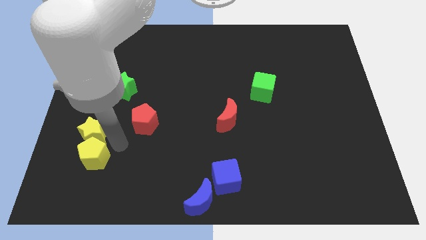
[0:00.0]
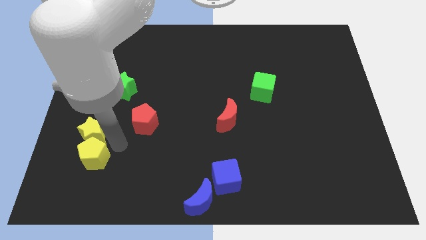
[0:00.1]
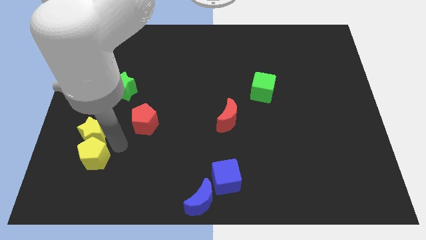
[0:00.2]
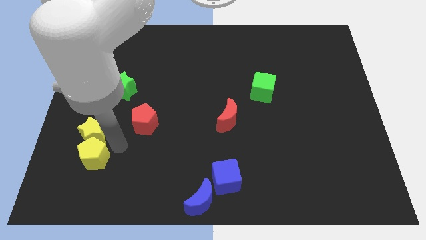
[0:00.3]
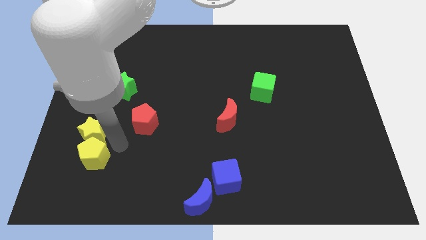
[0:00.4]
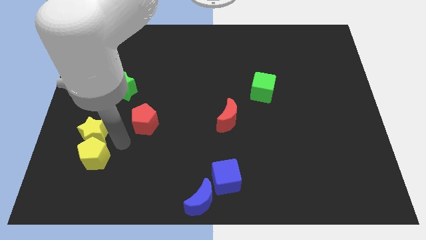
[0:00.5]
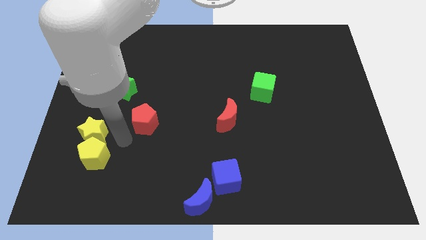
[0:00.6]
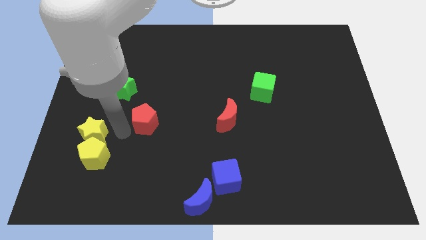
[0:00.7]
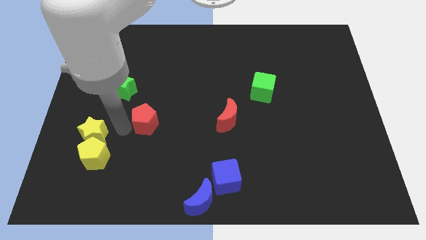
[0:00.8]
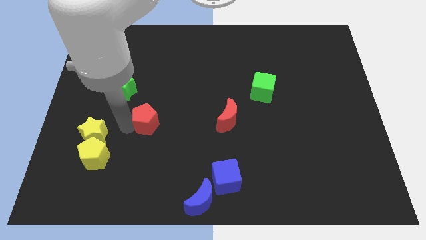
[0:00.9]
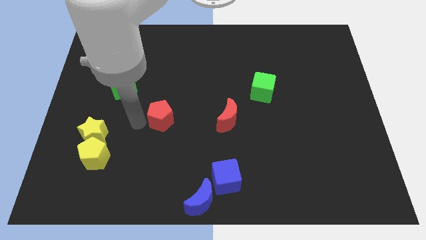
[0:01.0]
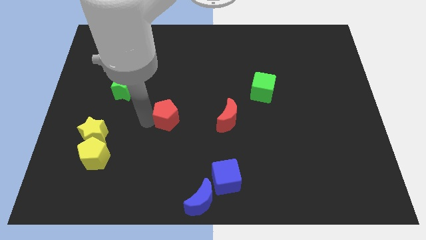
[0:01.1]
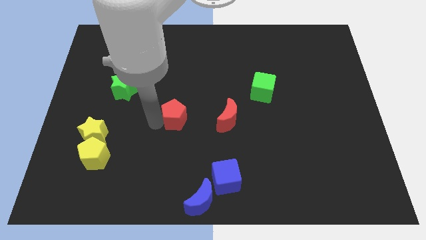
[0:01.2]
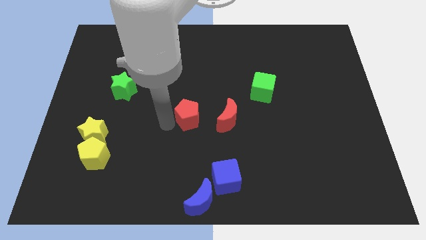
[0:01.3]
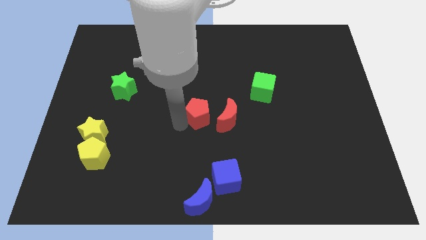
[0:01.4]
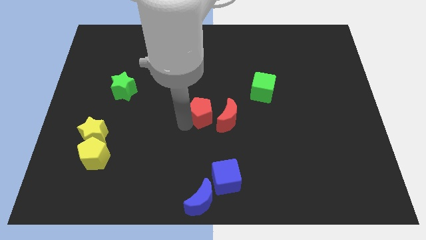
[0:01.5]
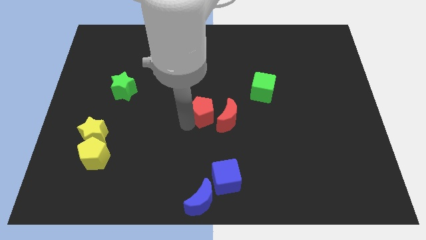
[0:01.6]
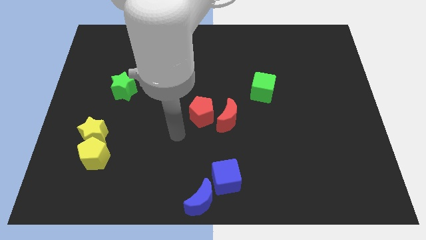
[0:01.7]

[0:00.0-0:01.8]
slide the red pentagon slightly towards the red crescent

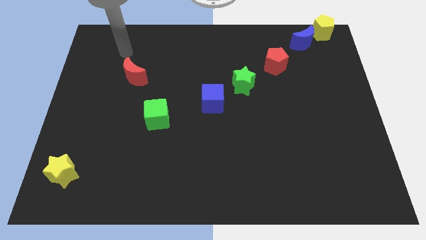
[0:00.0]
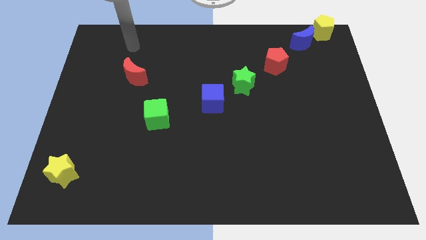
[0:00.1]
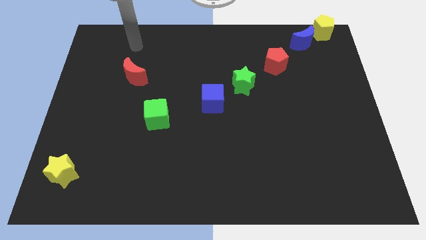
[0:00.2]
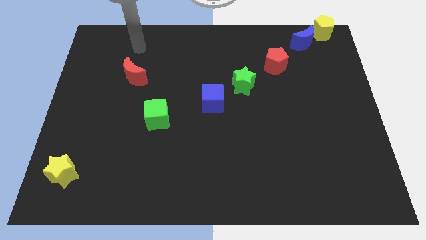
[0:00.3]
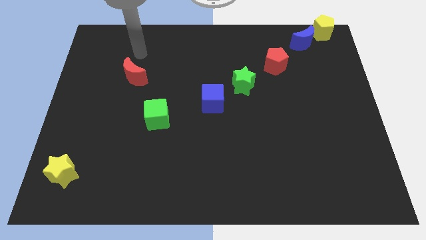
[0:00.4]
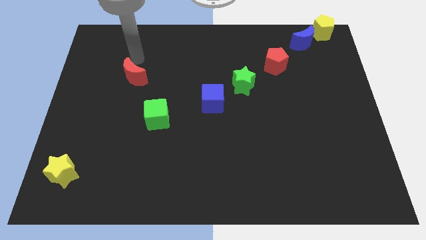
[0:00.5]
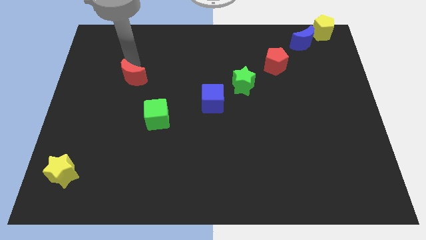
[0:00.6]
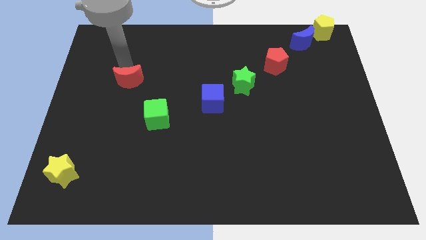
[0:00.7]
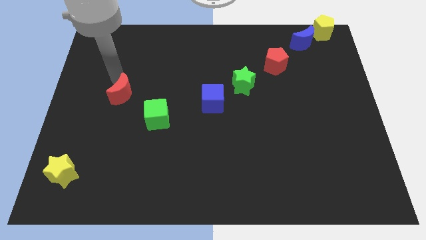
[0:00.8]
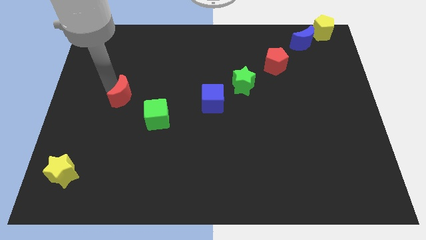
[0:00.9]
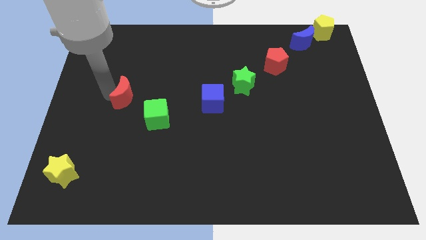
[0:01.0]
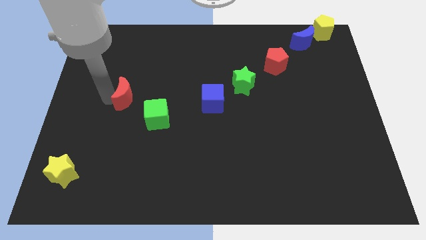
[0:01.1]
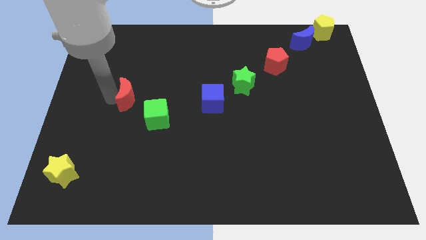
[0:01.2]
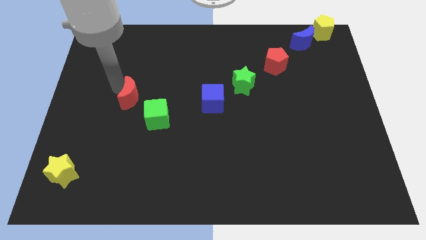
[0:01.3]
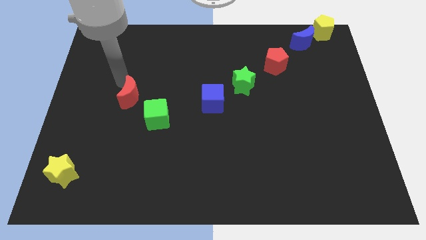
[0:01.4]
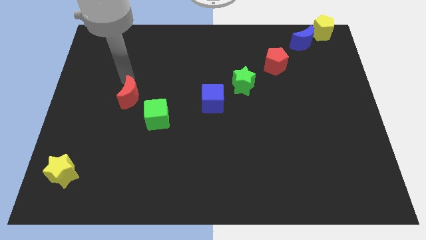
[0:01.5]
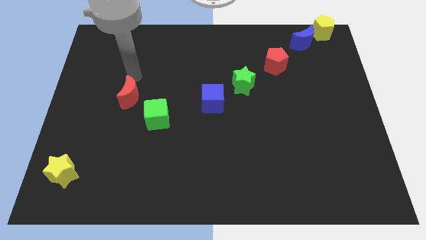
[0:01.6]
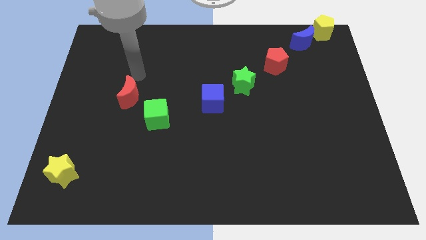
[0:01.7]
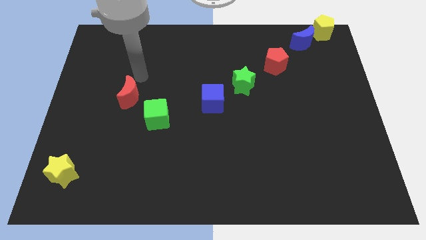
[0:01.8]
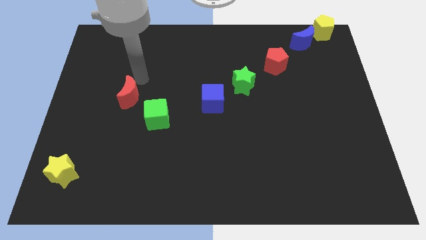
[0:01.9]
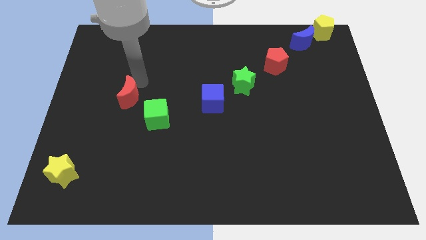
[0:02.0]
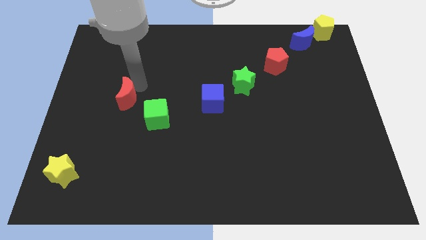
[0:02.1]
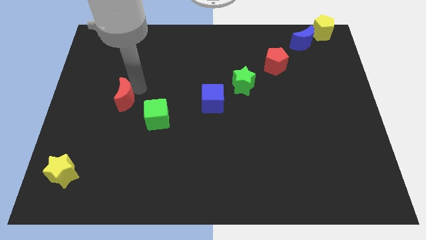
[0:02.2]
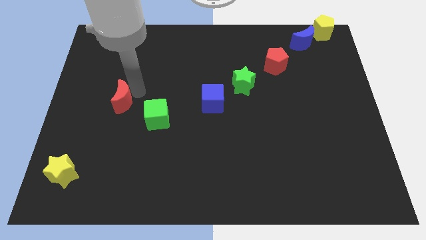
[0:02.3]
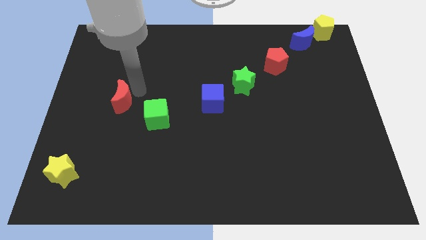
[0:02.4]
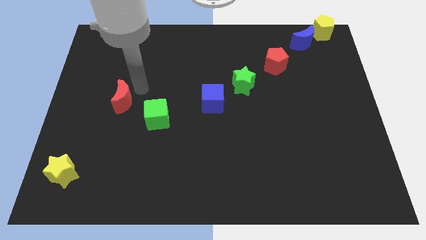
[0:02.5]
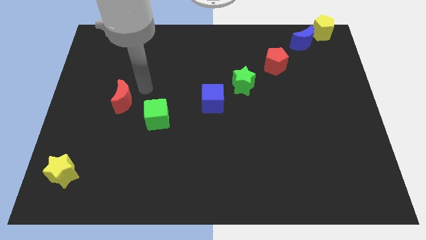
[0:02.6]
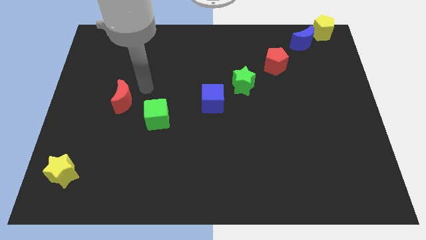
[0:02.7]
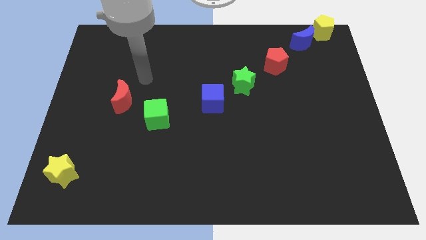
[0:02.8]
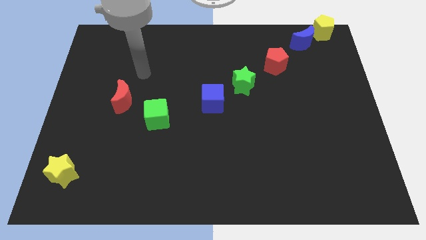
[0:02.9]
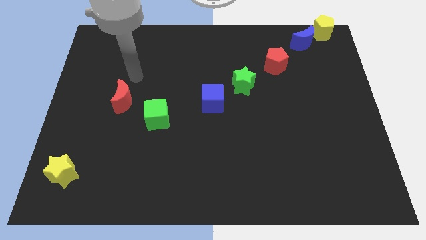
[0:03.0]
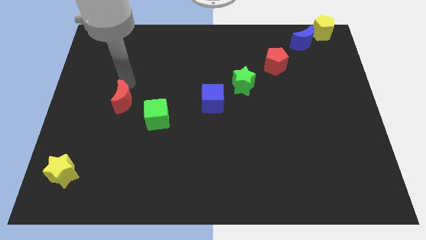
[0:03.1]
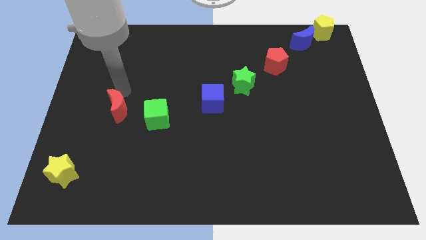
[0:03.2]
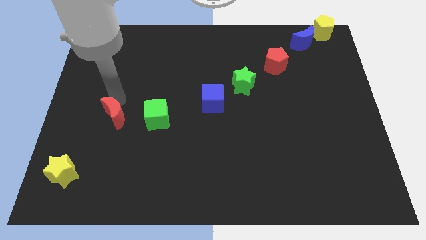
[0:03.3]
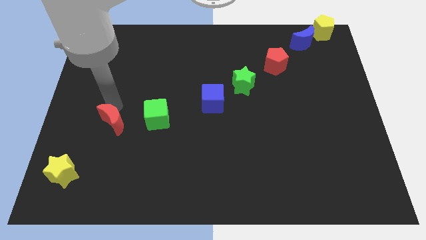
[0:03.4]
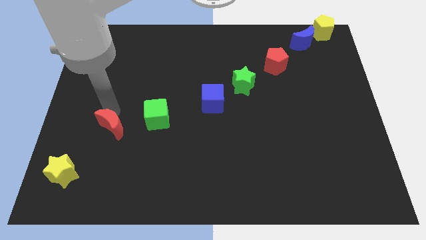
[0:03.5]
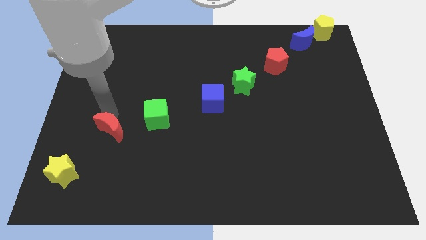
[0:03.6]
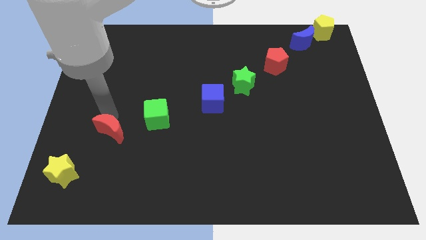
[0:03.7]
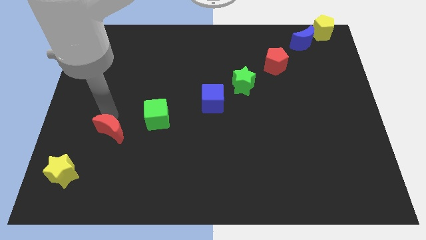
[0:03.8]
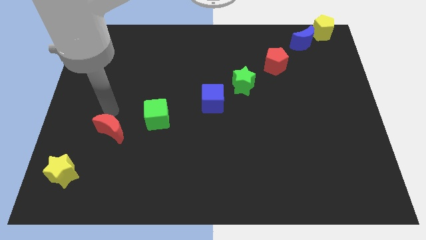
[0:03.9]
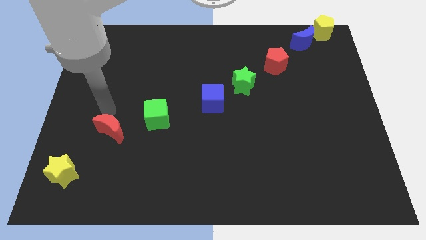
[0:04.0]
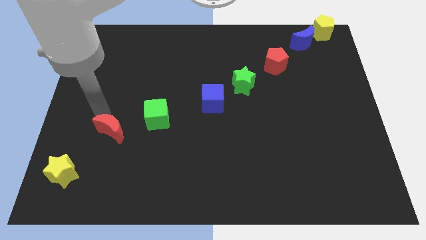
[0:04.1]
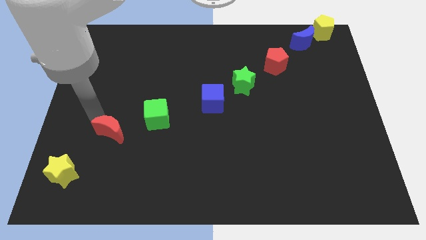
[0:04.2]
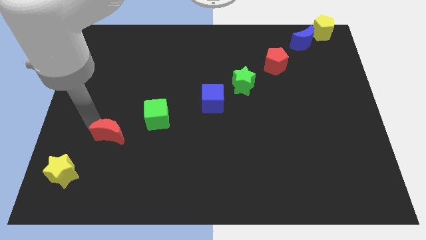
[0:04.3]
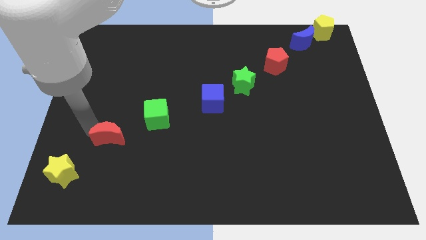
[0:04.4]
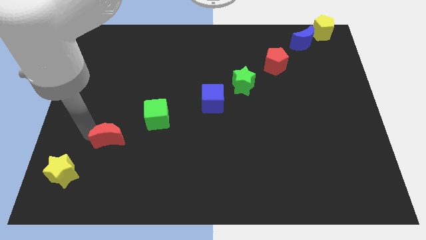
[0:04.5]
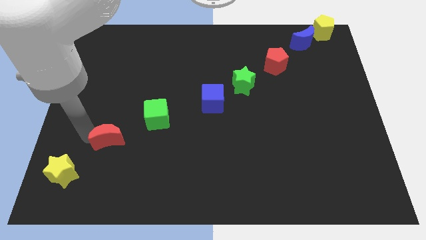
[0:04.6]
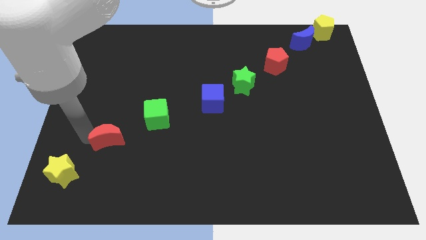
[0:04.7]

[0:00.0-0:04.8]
place the red moon between green cube and yellow star

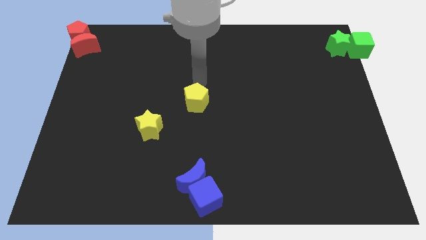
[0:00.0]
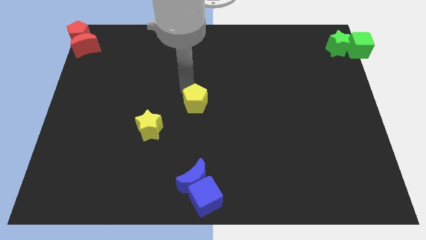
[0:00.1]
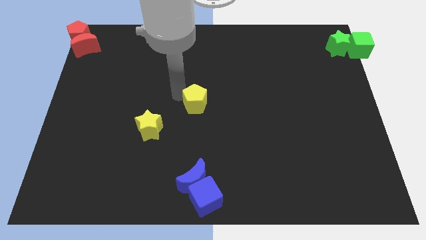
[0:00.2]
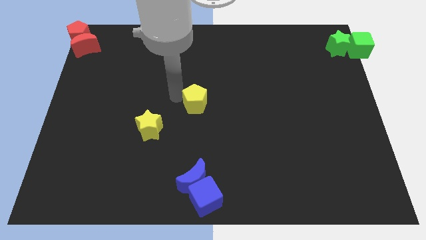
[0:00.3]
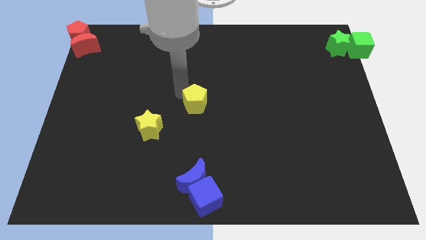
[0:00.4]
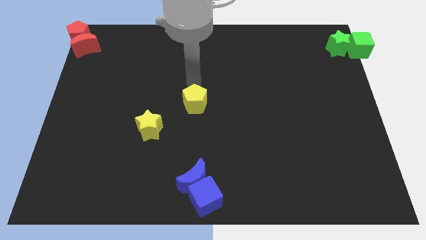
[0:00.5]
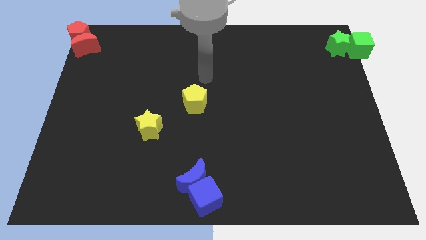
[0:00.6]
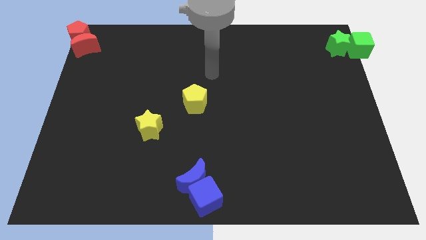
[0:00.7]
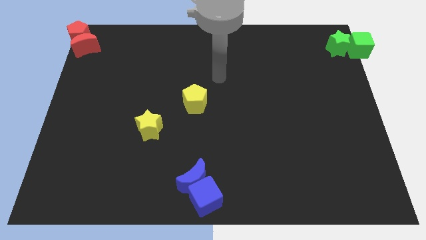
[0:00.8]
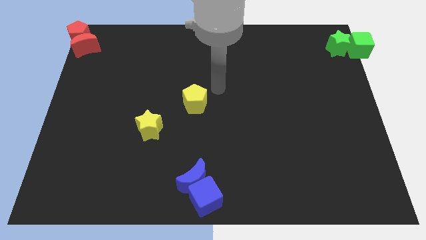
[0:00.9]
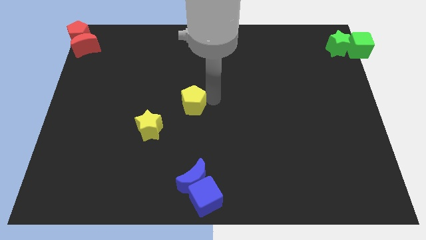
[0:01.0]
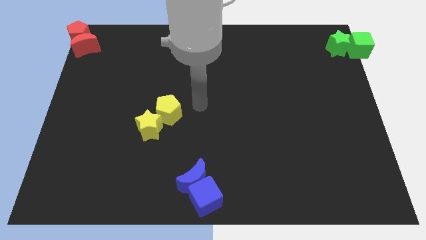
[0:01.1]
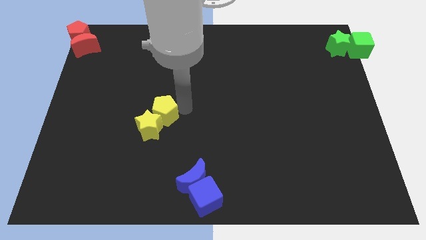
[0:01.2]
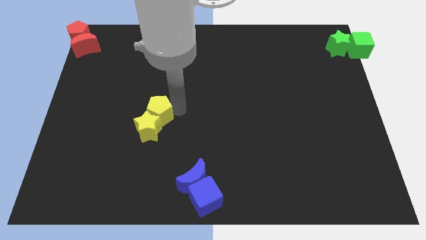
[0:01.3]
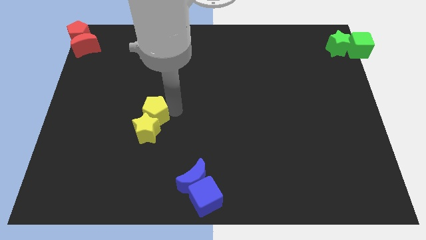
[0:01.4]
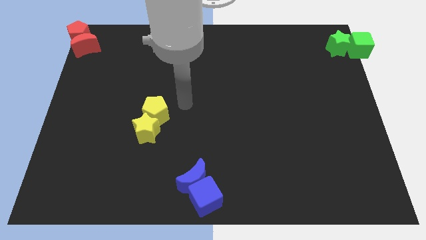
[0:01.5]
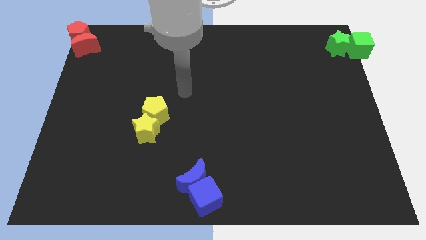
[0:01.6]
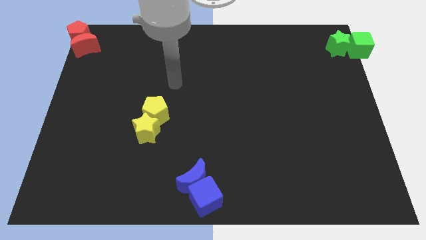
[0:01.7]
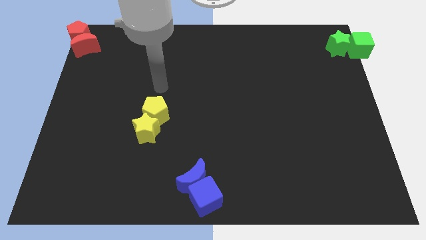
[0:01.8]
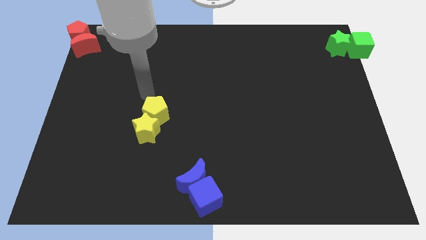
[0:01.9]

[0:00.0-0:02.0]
push the yellow star into the yellow pentagon

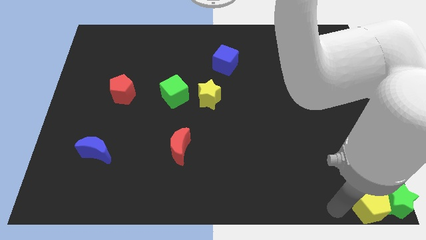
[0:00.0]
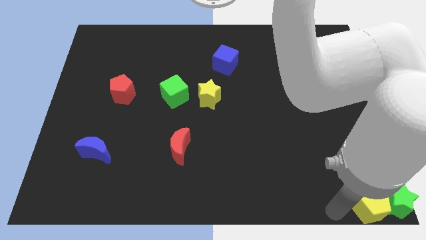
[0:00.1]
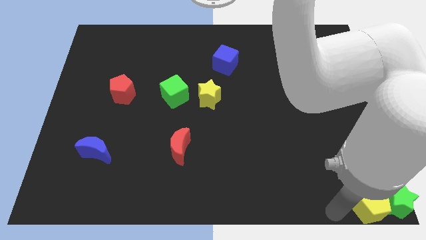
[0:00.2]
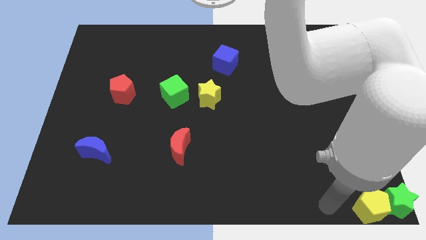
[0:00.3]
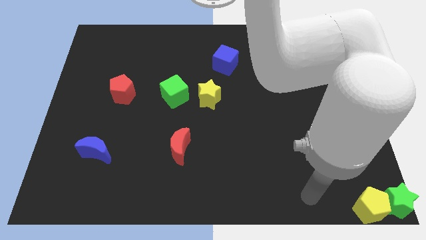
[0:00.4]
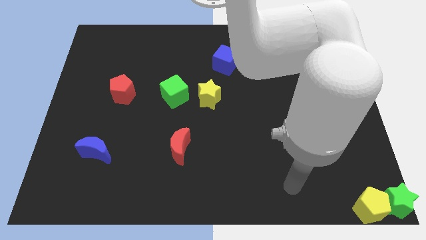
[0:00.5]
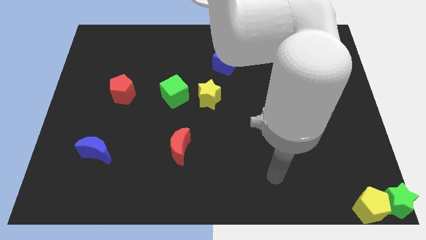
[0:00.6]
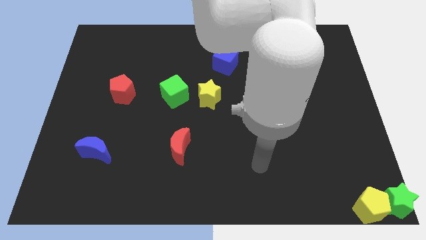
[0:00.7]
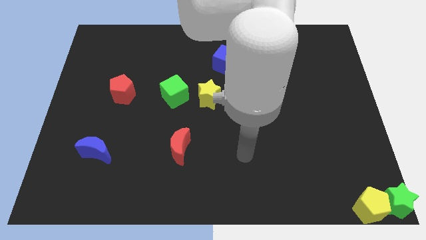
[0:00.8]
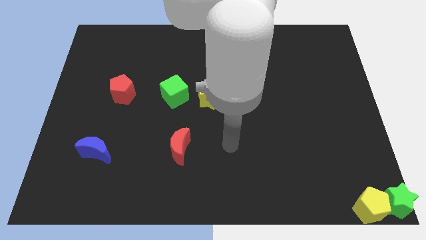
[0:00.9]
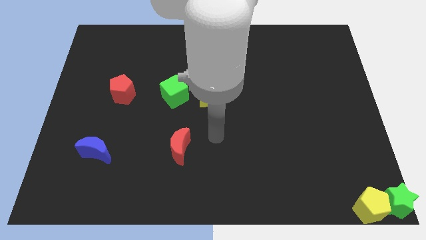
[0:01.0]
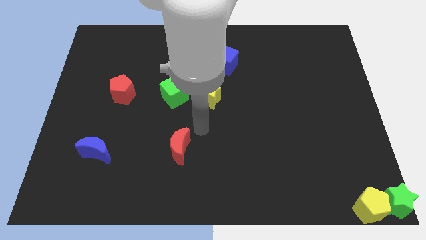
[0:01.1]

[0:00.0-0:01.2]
drag your arm to the center
